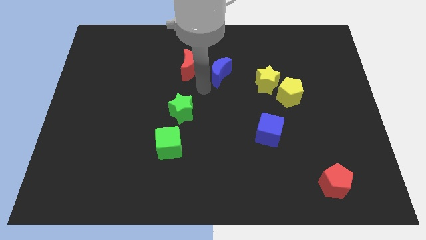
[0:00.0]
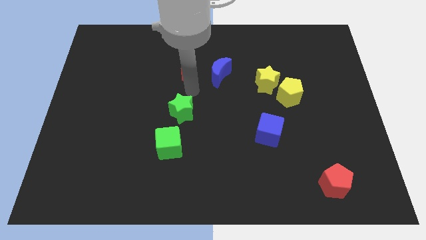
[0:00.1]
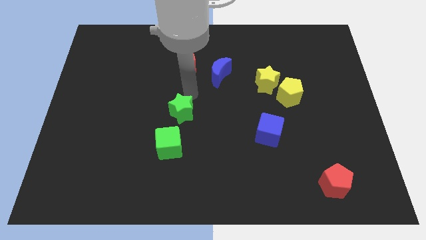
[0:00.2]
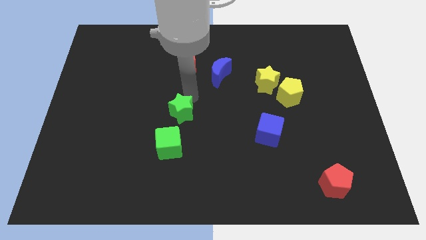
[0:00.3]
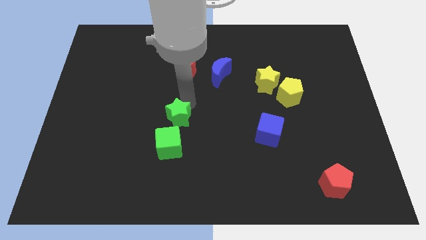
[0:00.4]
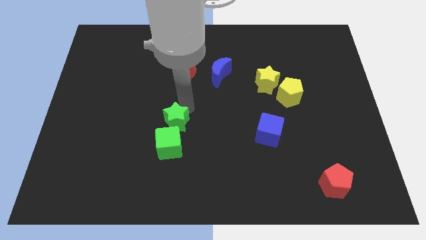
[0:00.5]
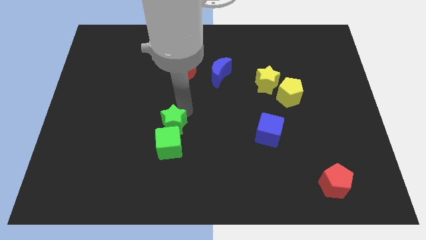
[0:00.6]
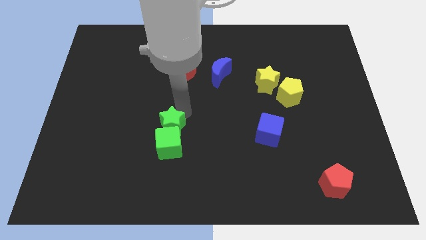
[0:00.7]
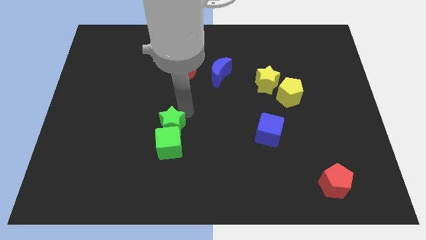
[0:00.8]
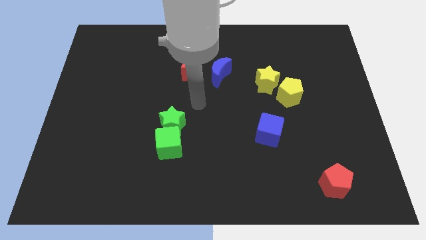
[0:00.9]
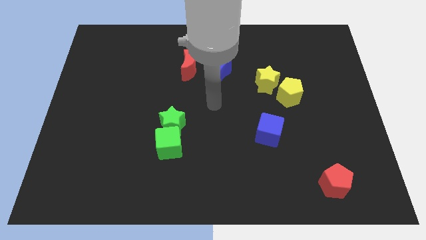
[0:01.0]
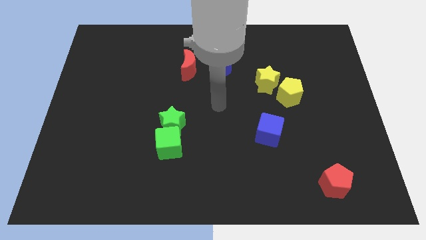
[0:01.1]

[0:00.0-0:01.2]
place the green star above the green cube

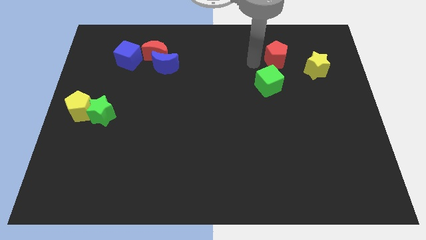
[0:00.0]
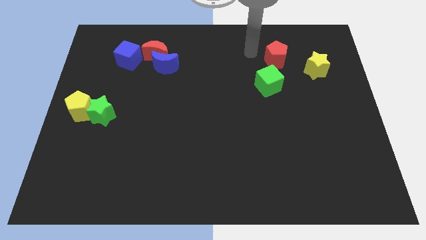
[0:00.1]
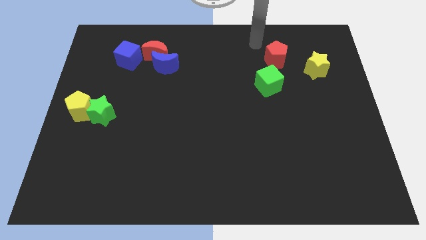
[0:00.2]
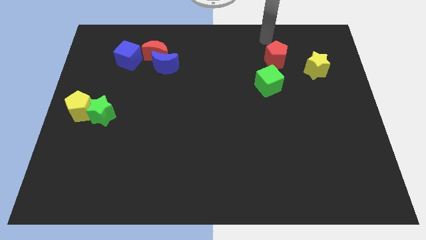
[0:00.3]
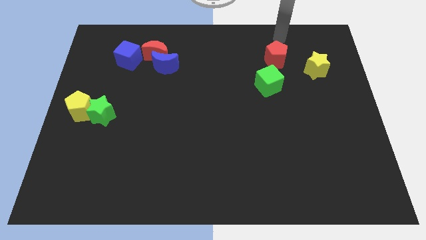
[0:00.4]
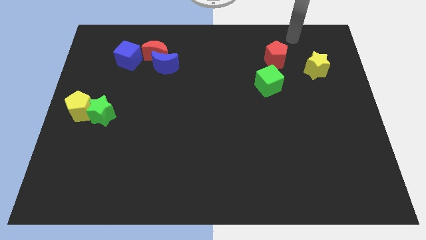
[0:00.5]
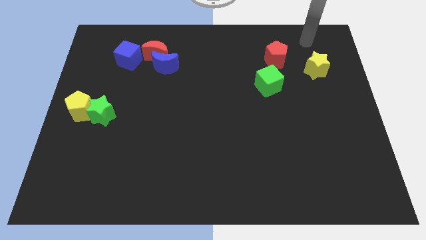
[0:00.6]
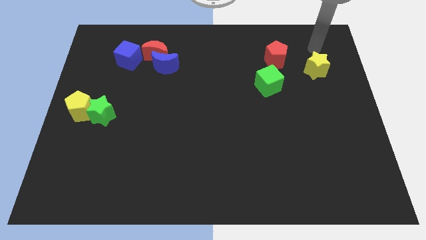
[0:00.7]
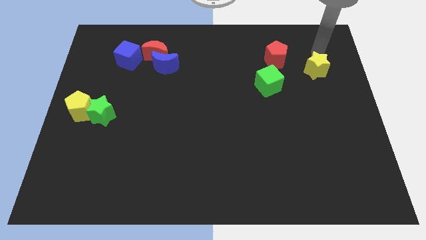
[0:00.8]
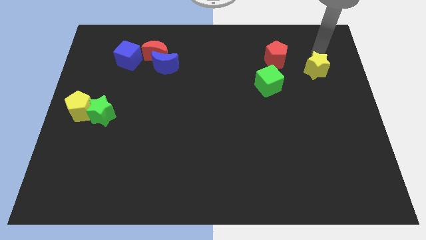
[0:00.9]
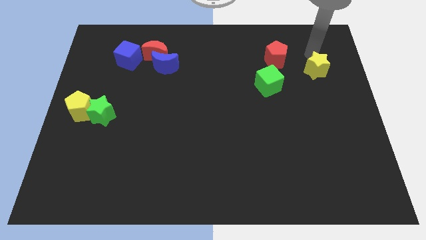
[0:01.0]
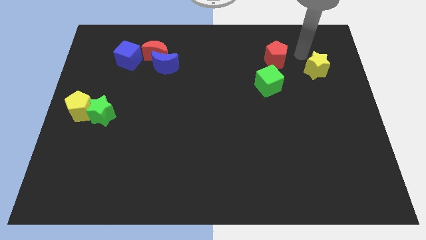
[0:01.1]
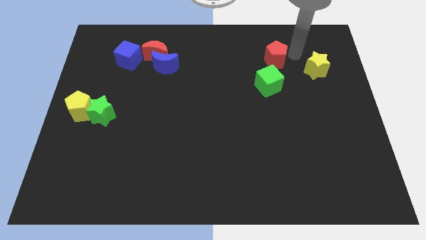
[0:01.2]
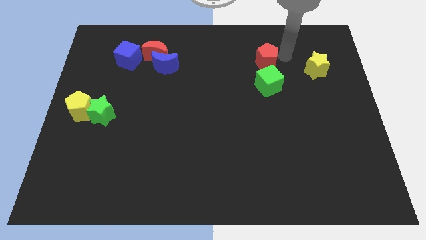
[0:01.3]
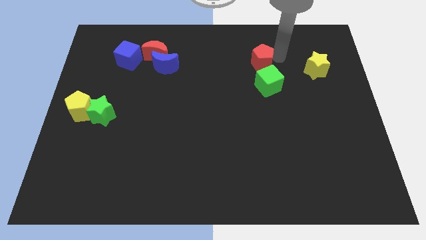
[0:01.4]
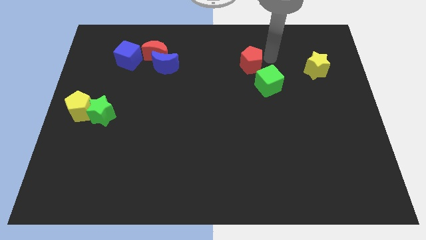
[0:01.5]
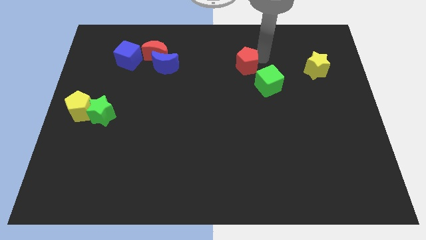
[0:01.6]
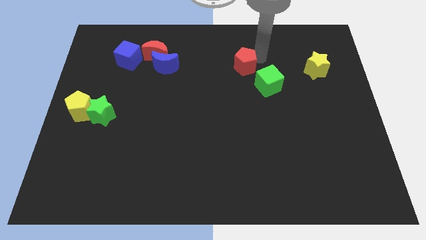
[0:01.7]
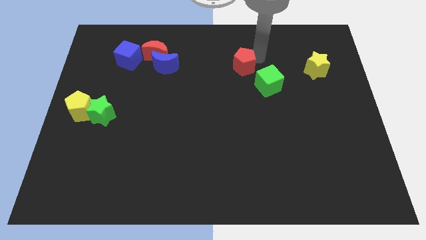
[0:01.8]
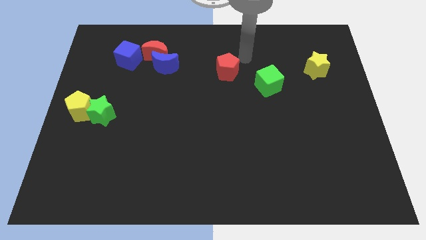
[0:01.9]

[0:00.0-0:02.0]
move the red pentagon diagonally top left to the green cube

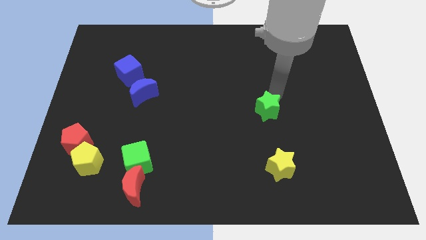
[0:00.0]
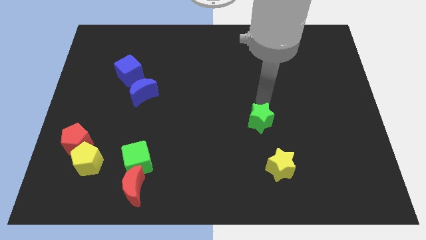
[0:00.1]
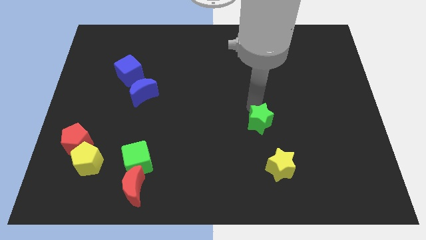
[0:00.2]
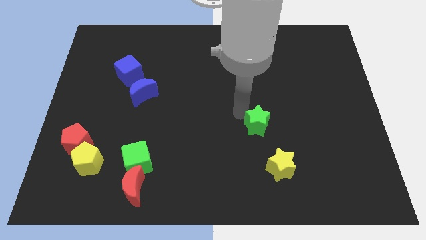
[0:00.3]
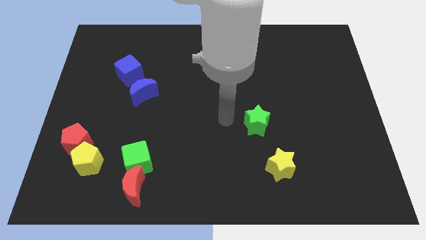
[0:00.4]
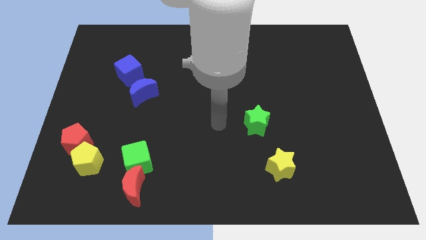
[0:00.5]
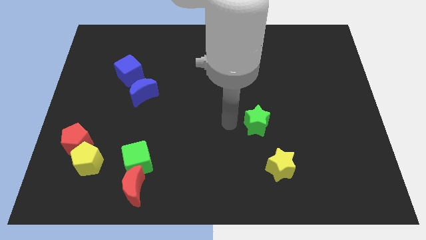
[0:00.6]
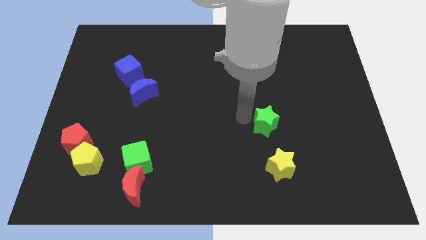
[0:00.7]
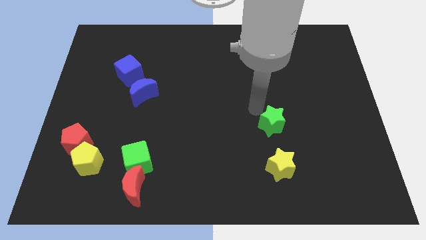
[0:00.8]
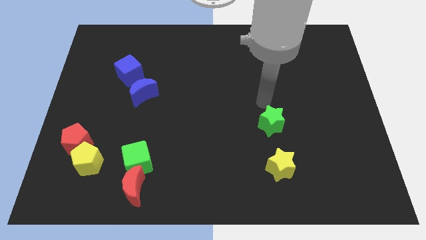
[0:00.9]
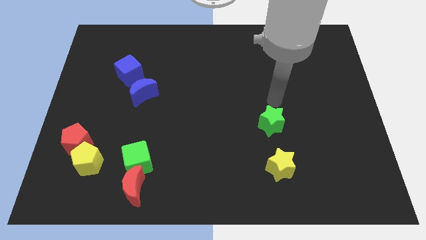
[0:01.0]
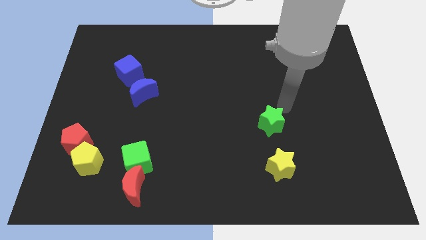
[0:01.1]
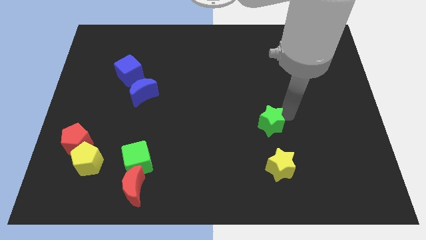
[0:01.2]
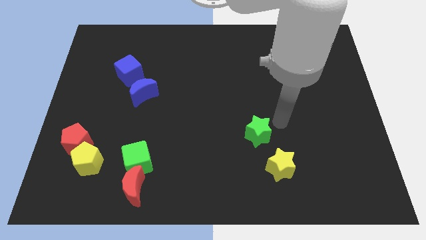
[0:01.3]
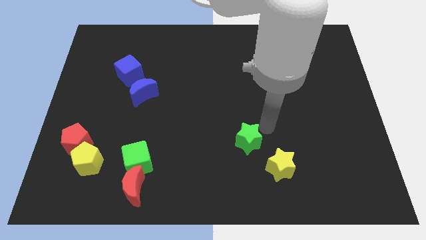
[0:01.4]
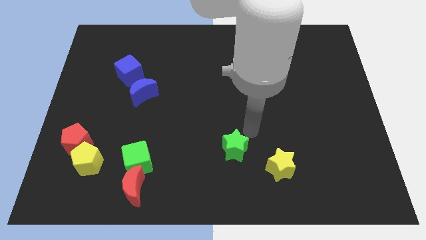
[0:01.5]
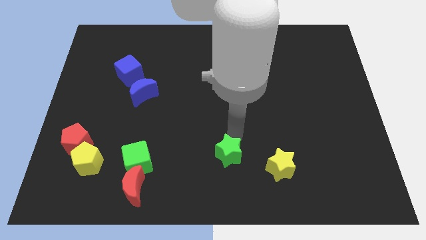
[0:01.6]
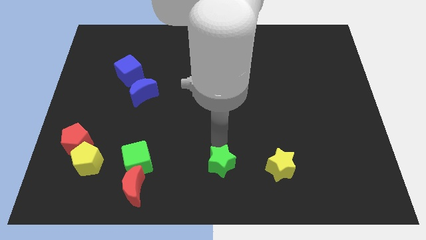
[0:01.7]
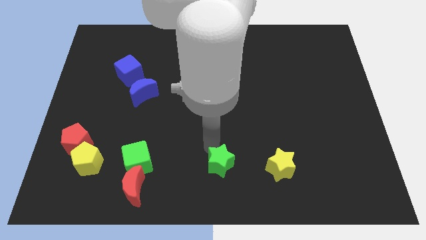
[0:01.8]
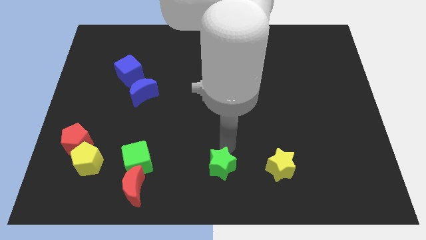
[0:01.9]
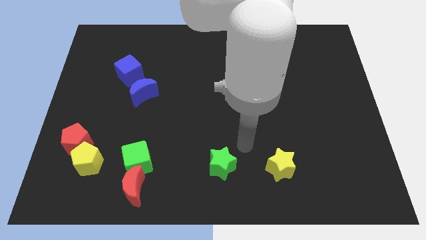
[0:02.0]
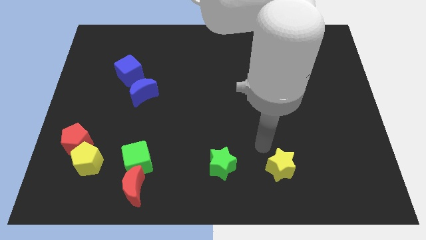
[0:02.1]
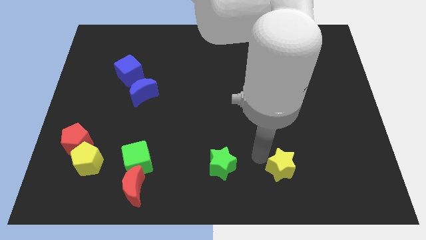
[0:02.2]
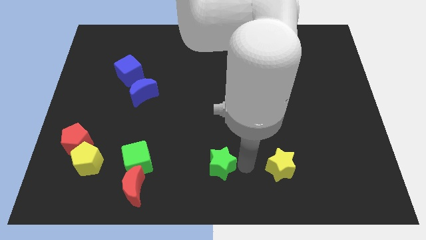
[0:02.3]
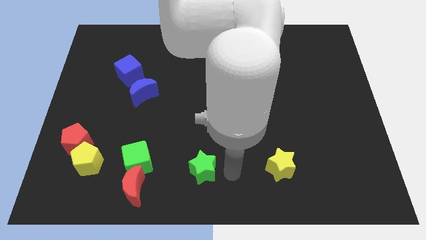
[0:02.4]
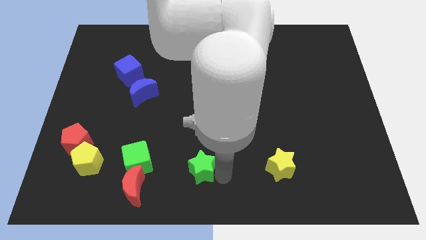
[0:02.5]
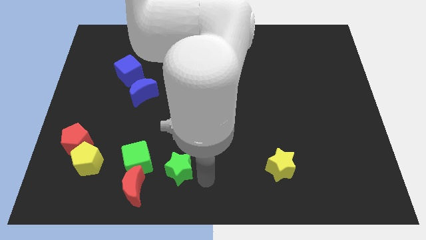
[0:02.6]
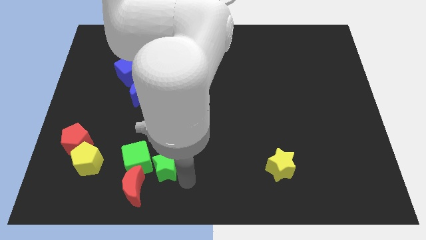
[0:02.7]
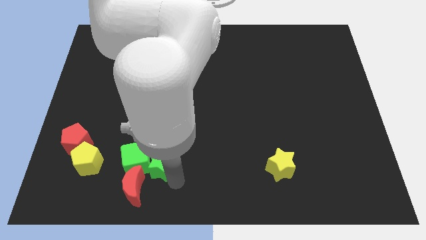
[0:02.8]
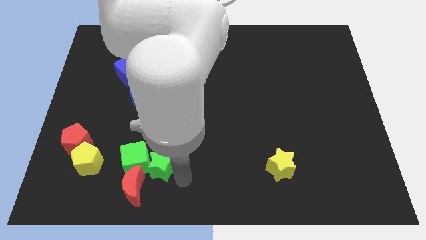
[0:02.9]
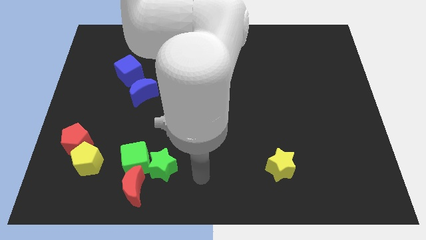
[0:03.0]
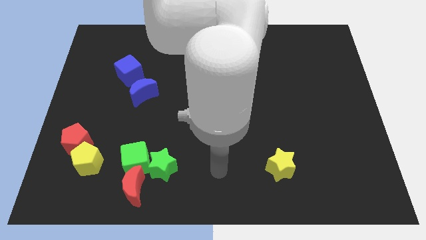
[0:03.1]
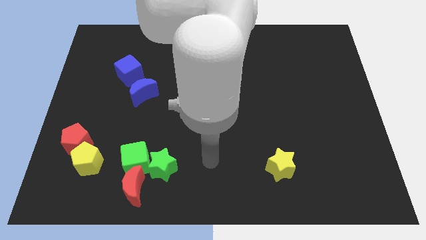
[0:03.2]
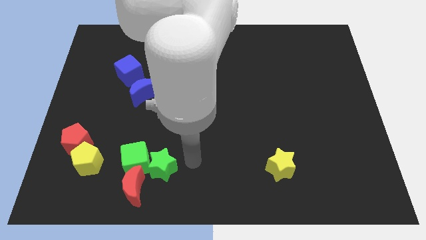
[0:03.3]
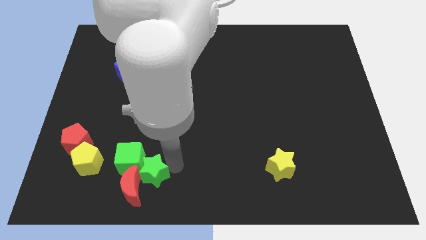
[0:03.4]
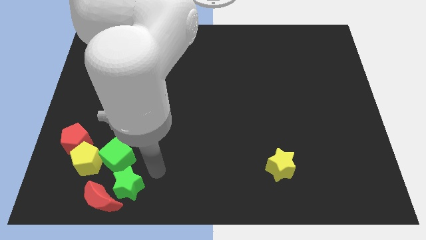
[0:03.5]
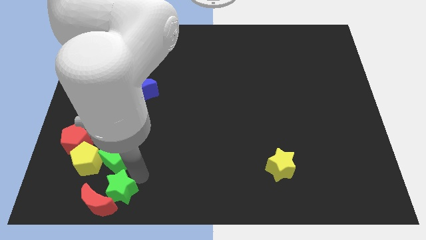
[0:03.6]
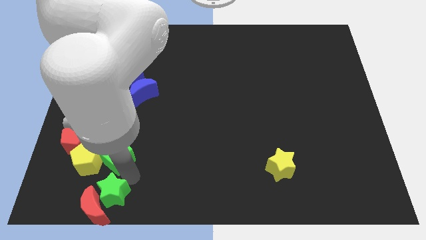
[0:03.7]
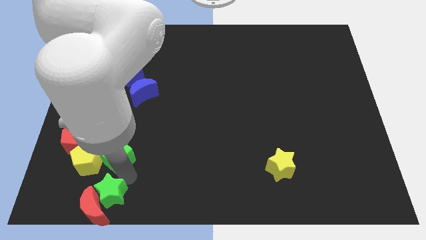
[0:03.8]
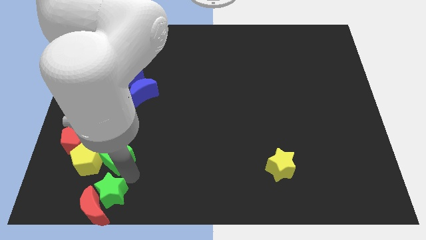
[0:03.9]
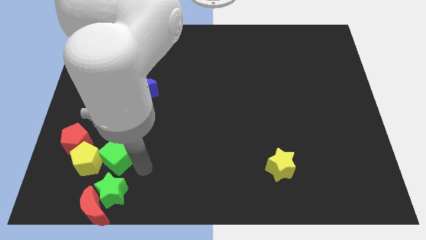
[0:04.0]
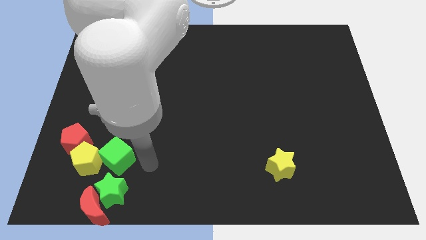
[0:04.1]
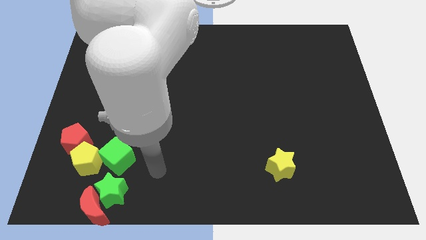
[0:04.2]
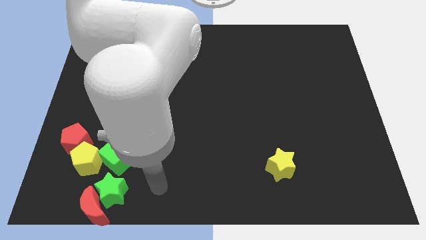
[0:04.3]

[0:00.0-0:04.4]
move the green star into the red crescent

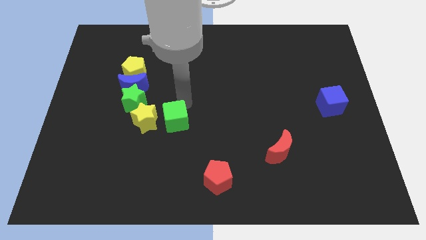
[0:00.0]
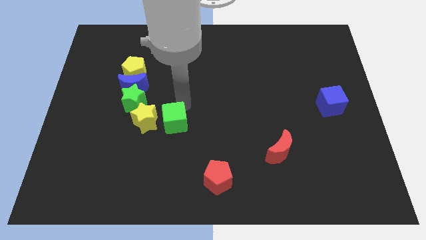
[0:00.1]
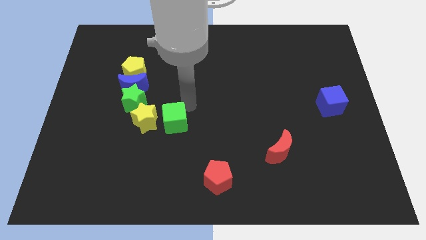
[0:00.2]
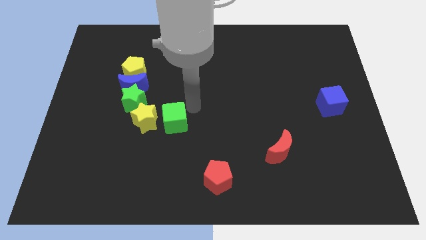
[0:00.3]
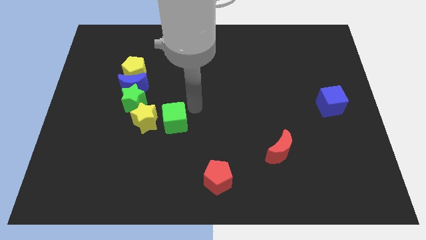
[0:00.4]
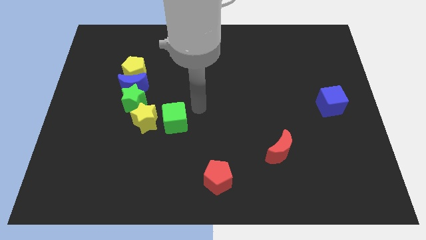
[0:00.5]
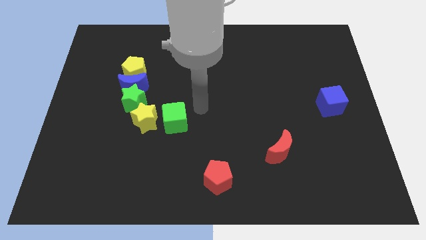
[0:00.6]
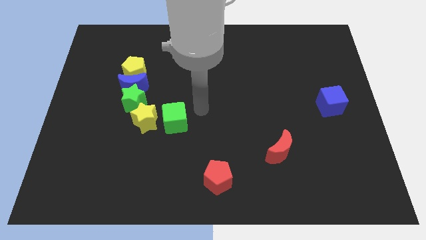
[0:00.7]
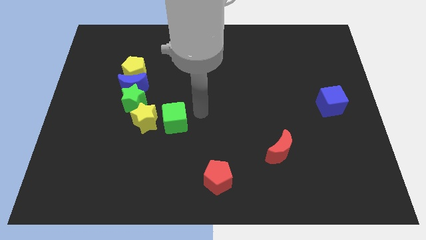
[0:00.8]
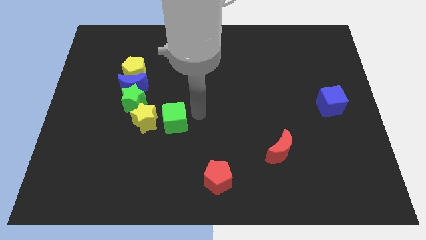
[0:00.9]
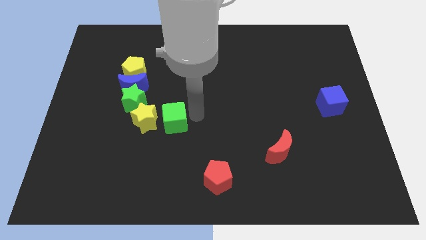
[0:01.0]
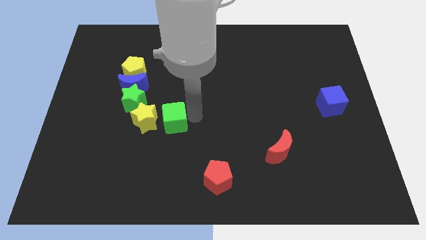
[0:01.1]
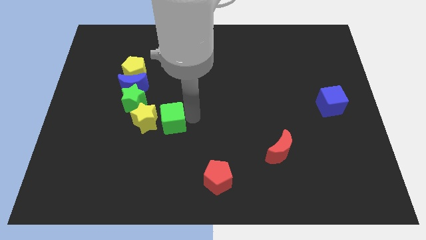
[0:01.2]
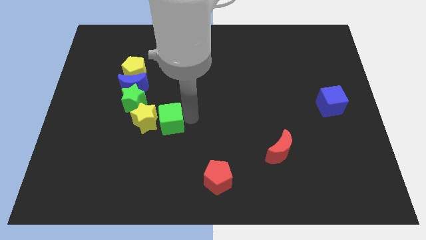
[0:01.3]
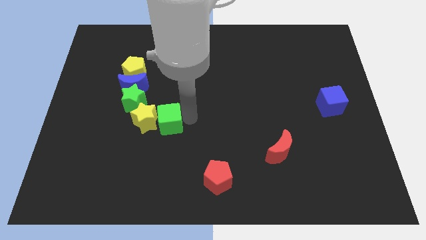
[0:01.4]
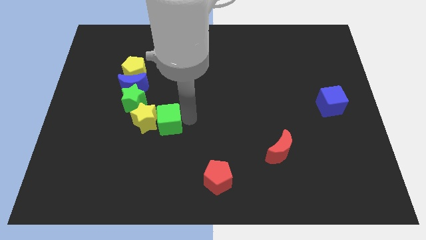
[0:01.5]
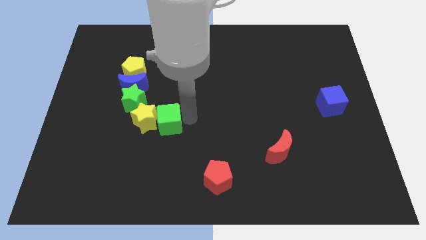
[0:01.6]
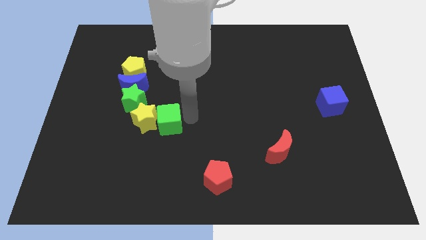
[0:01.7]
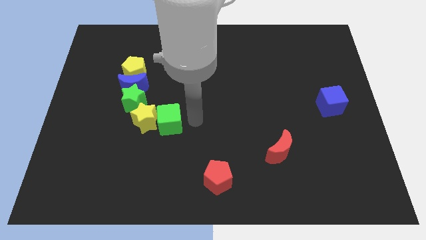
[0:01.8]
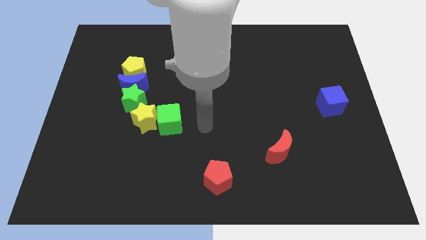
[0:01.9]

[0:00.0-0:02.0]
push the green cube close to the yellow star
